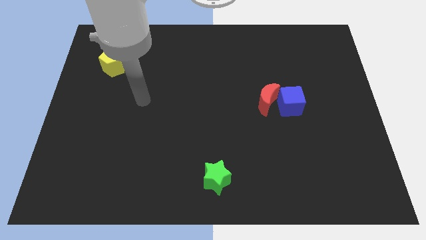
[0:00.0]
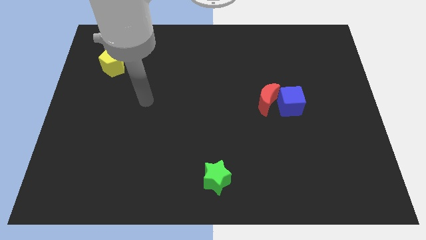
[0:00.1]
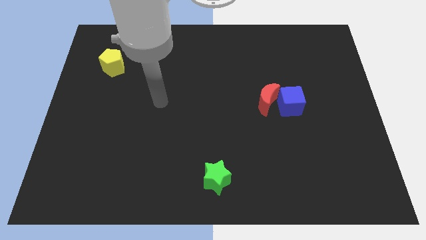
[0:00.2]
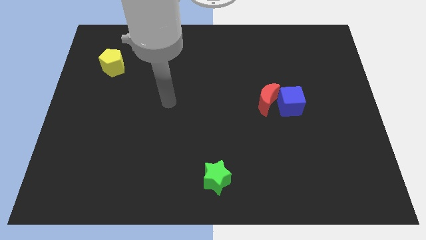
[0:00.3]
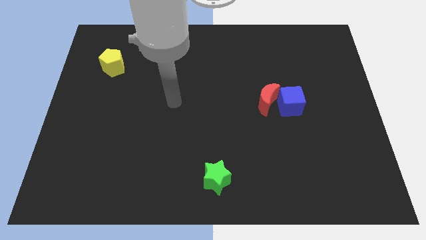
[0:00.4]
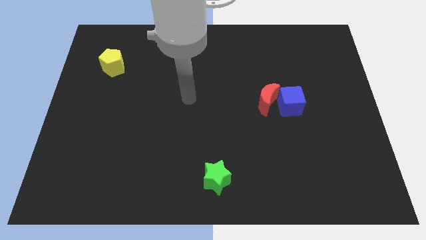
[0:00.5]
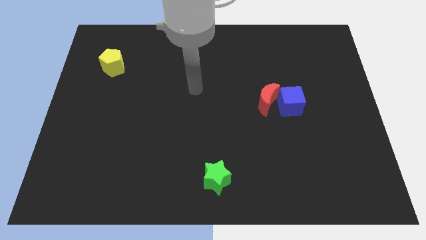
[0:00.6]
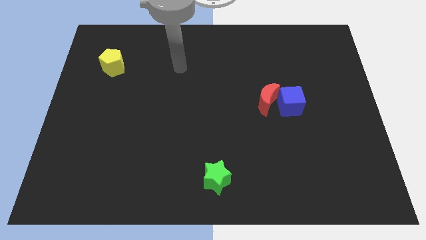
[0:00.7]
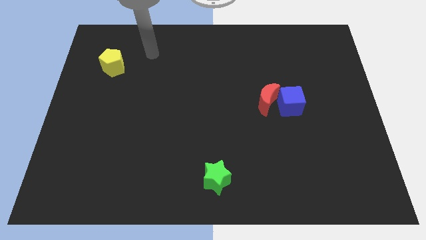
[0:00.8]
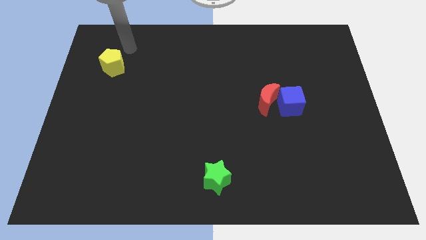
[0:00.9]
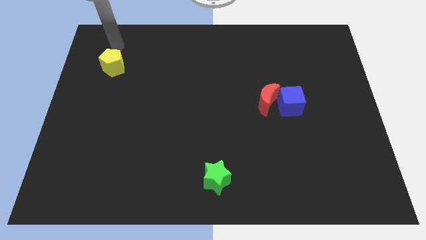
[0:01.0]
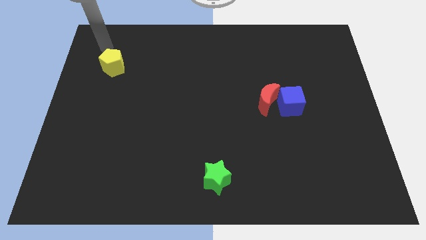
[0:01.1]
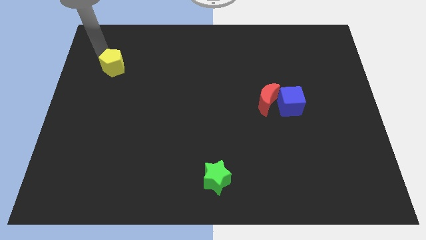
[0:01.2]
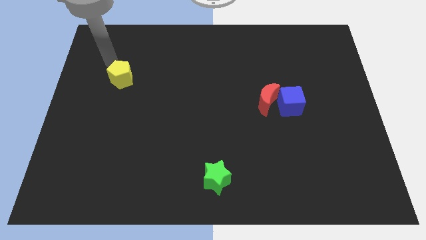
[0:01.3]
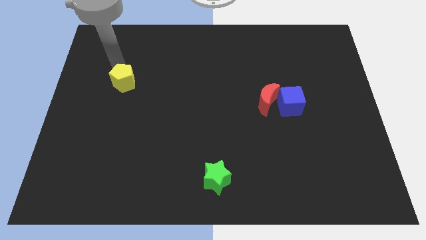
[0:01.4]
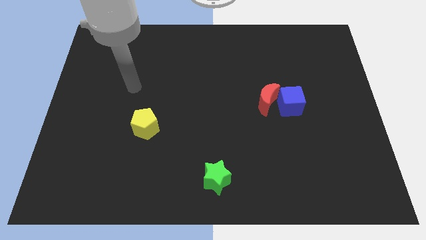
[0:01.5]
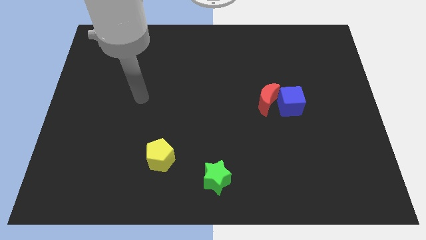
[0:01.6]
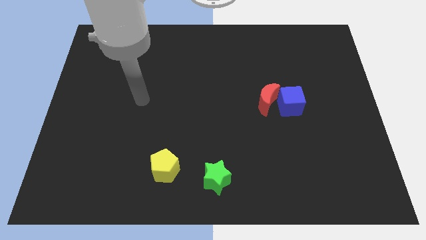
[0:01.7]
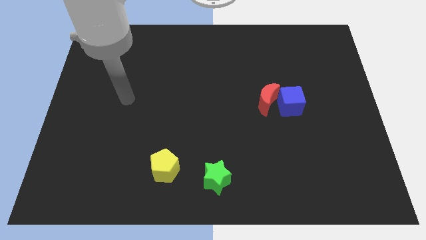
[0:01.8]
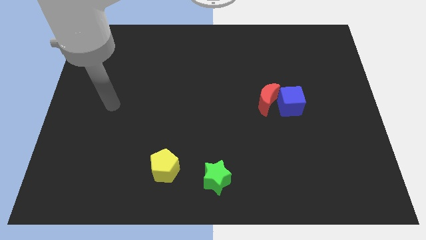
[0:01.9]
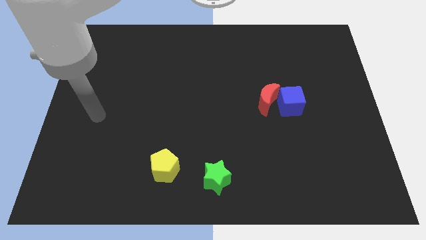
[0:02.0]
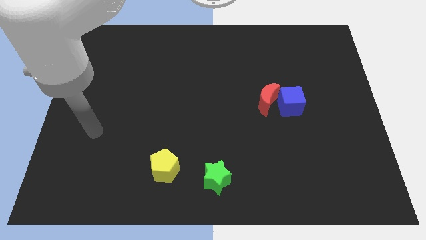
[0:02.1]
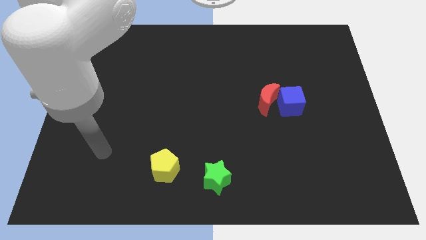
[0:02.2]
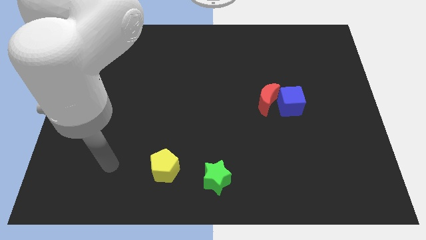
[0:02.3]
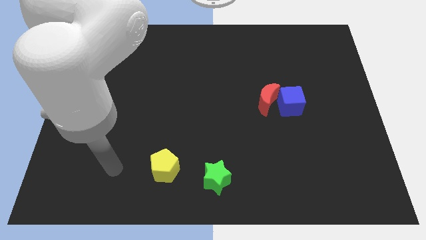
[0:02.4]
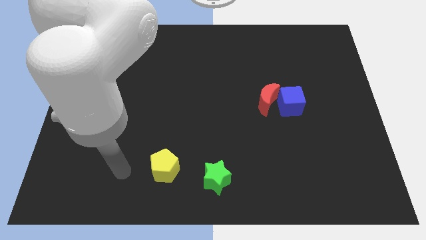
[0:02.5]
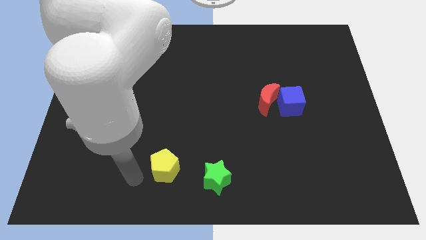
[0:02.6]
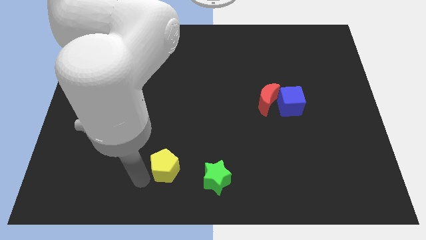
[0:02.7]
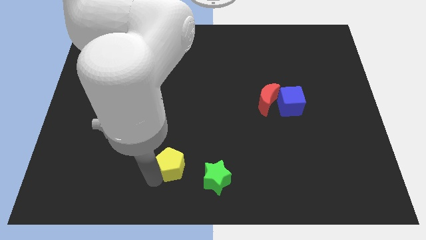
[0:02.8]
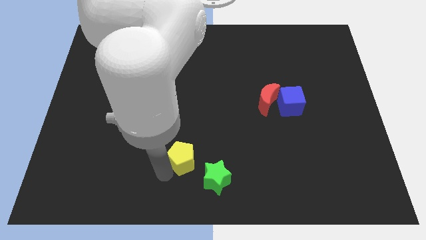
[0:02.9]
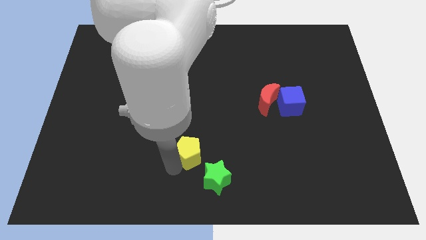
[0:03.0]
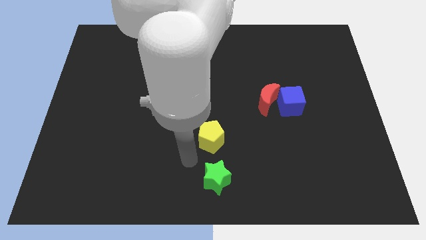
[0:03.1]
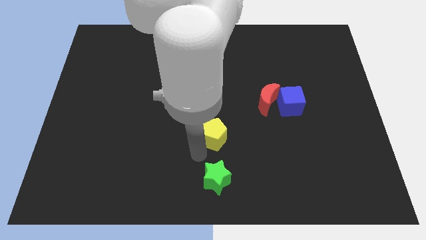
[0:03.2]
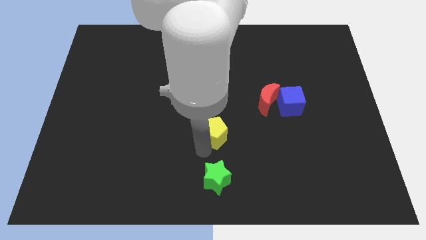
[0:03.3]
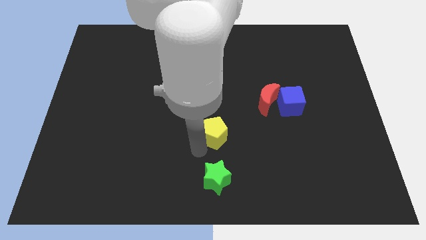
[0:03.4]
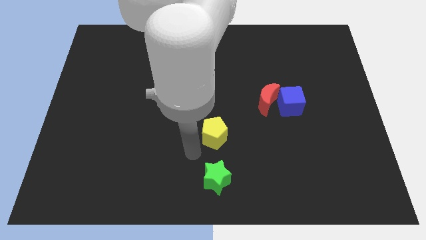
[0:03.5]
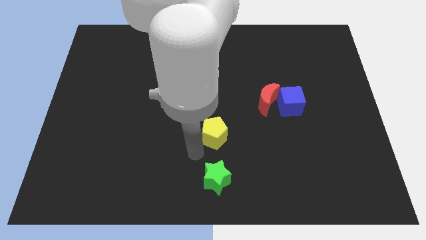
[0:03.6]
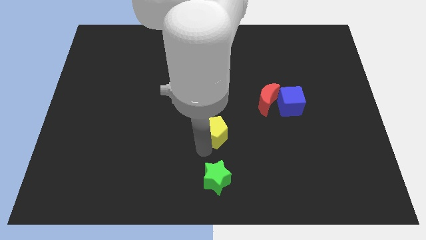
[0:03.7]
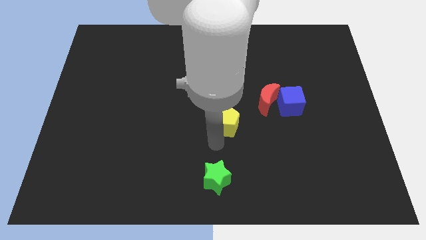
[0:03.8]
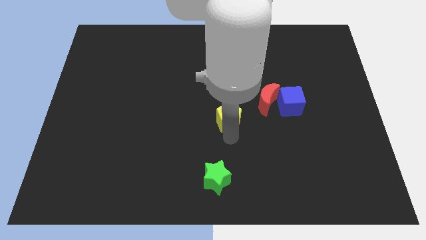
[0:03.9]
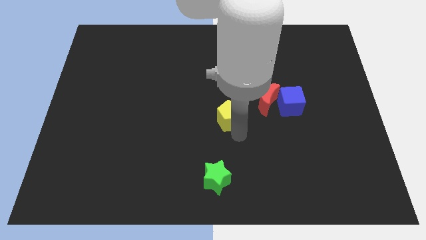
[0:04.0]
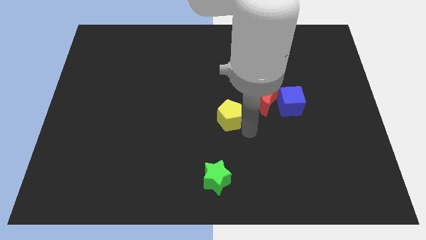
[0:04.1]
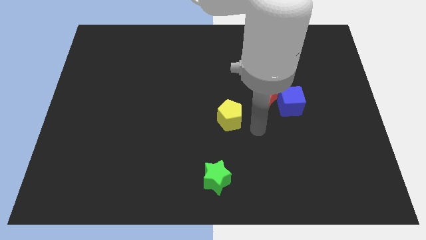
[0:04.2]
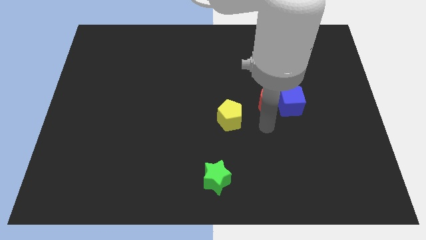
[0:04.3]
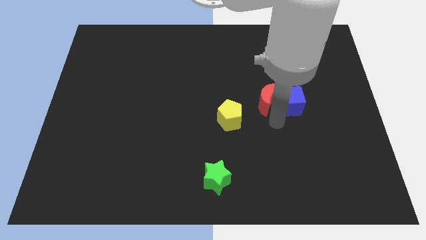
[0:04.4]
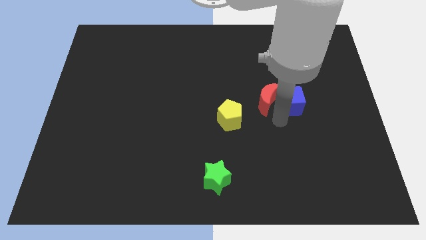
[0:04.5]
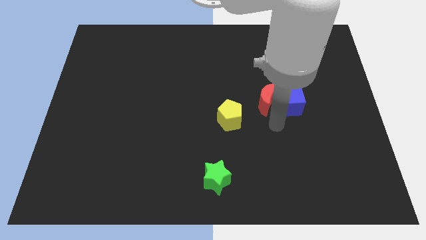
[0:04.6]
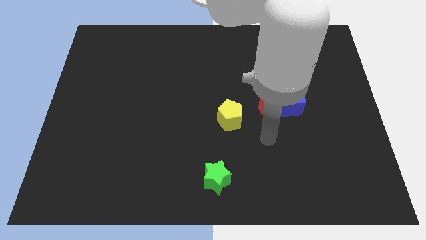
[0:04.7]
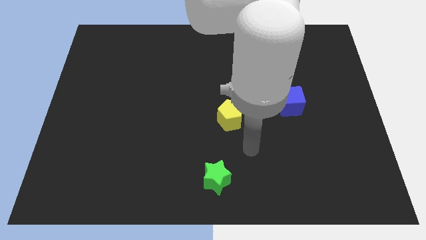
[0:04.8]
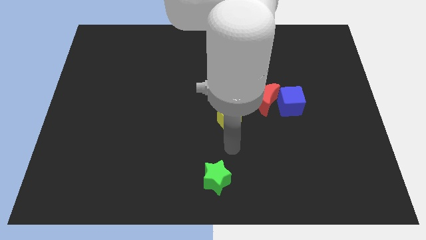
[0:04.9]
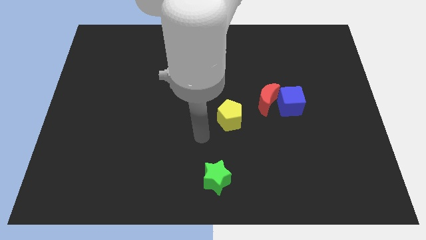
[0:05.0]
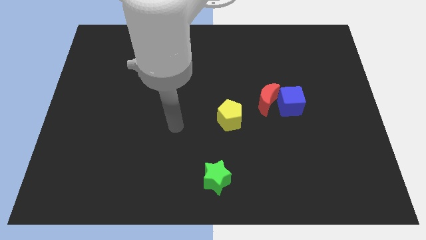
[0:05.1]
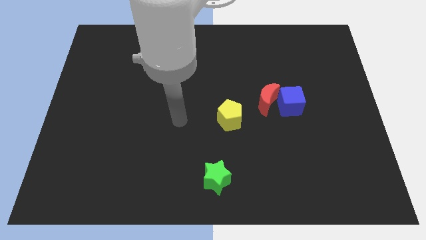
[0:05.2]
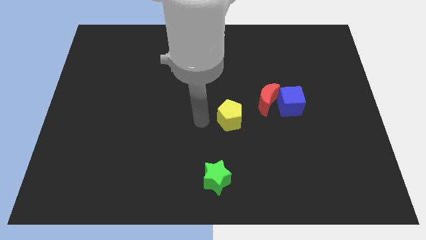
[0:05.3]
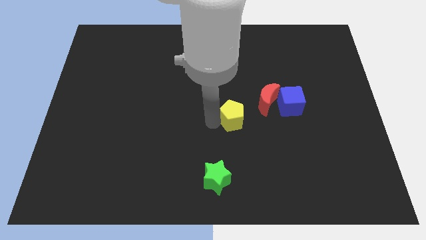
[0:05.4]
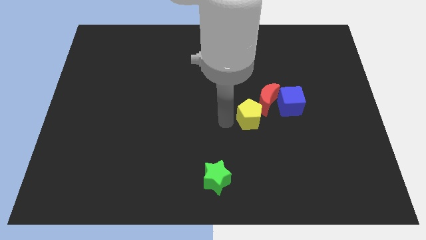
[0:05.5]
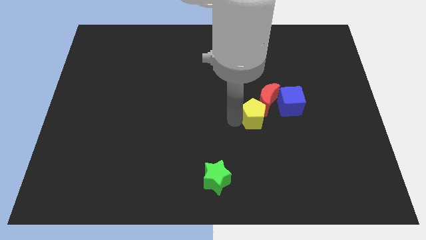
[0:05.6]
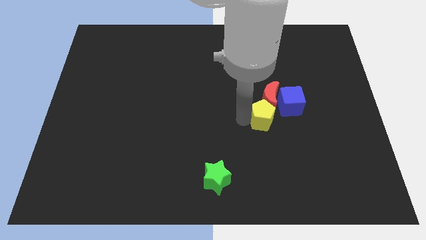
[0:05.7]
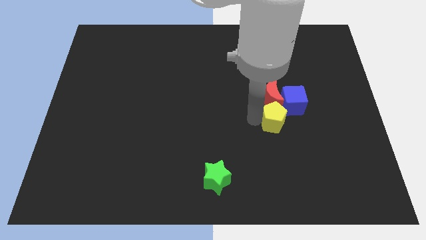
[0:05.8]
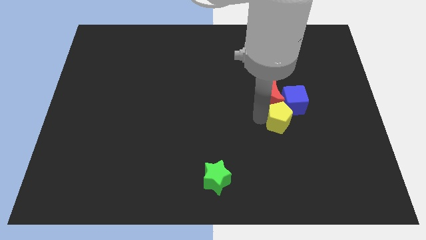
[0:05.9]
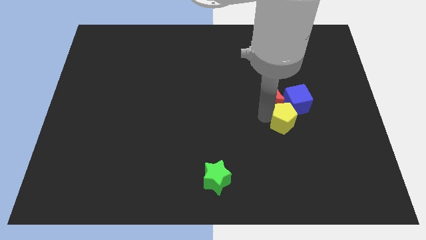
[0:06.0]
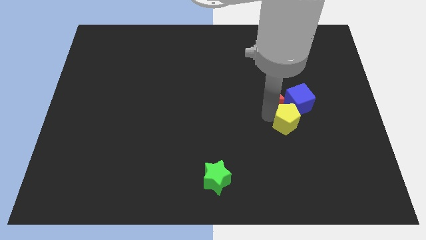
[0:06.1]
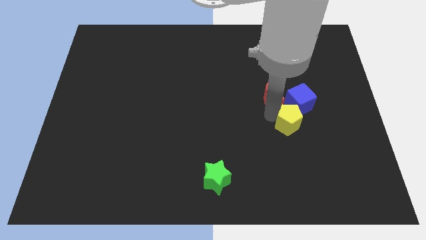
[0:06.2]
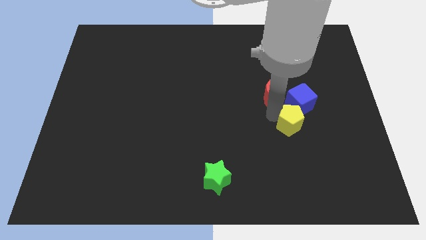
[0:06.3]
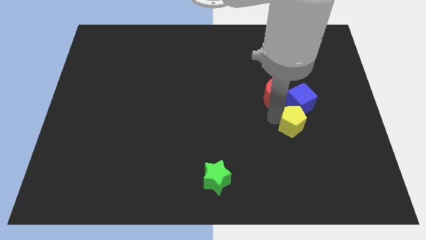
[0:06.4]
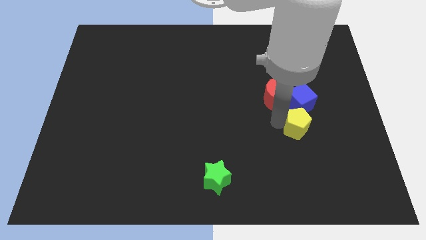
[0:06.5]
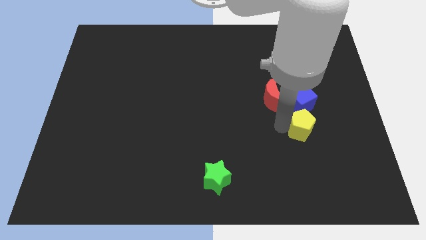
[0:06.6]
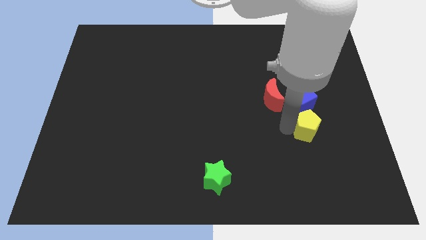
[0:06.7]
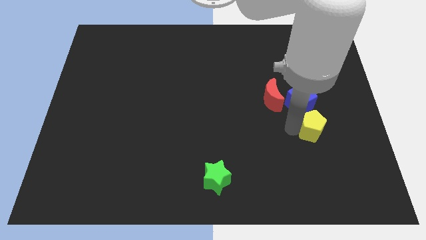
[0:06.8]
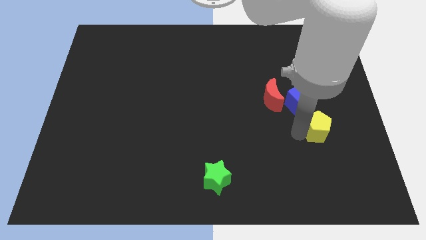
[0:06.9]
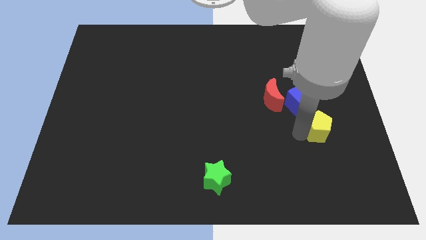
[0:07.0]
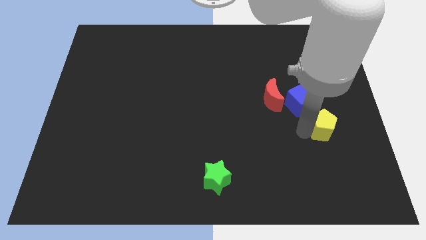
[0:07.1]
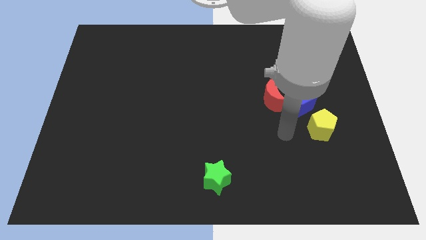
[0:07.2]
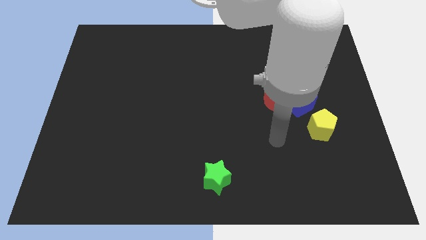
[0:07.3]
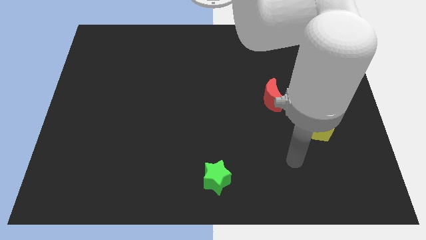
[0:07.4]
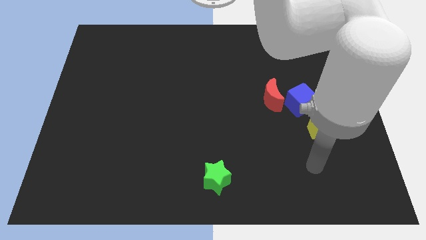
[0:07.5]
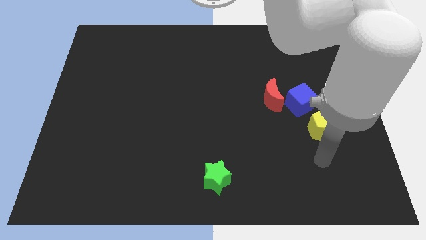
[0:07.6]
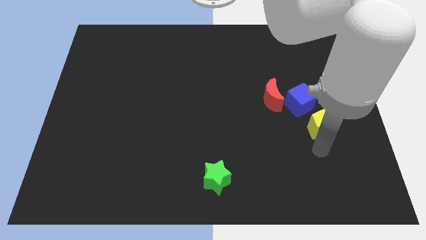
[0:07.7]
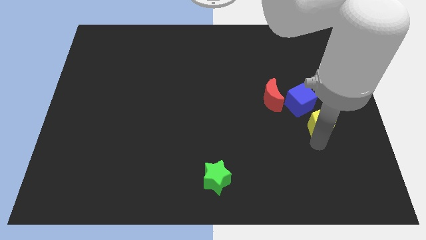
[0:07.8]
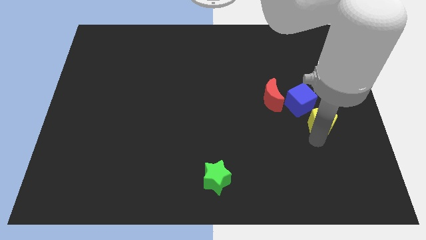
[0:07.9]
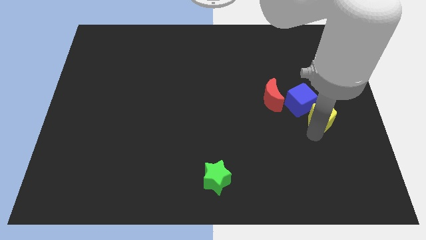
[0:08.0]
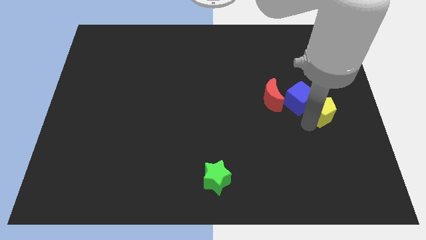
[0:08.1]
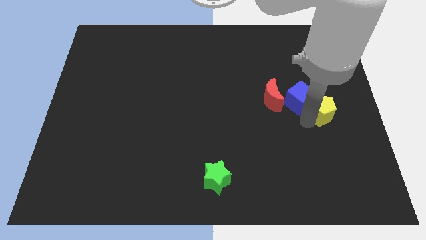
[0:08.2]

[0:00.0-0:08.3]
slide the yellow pentagon next to the blue cube
